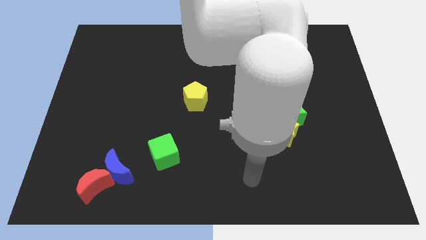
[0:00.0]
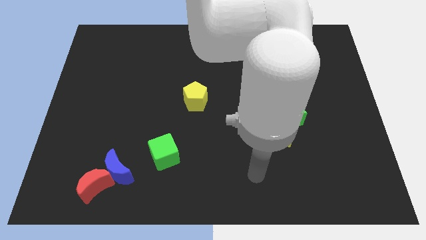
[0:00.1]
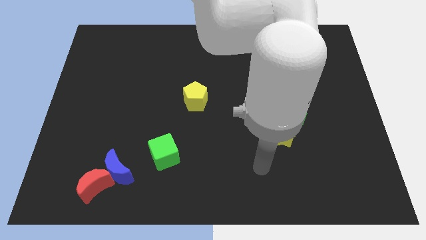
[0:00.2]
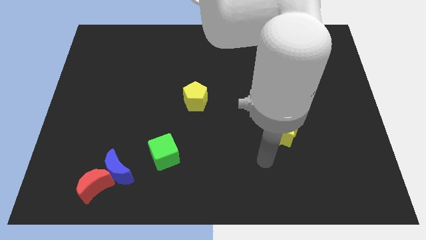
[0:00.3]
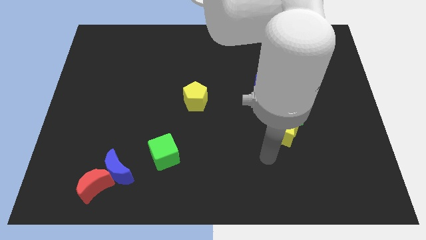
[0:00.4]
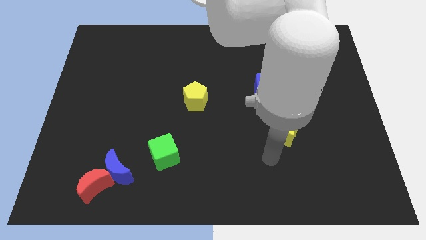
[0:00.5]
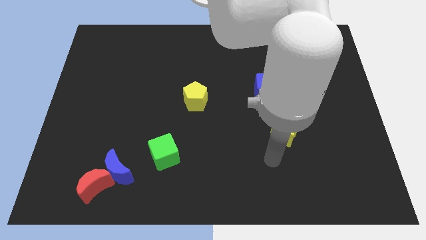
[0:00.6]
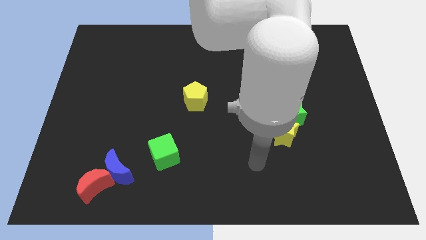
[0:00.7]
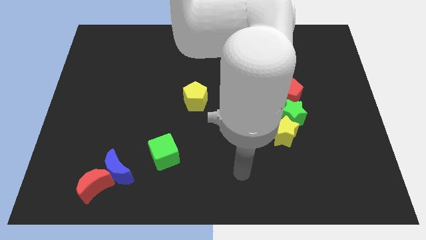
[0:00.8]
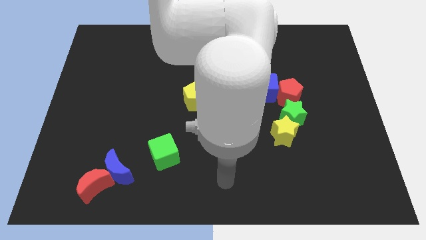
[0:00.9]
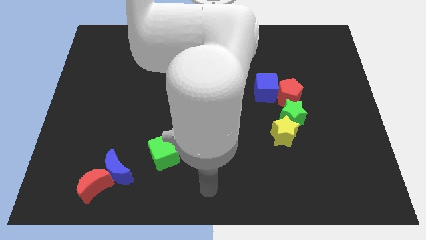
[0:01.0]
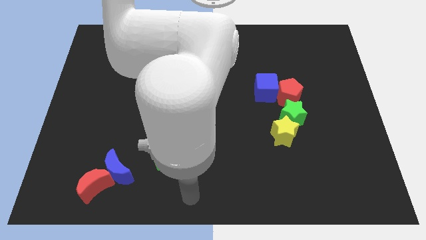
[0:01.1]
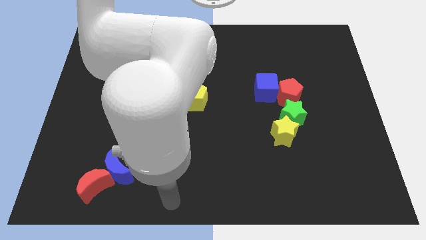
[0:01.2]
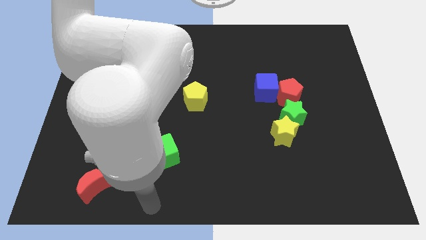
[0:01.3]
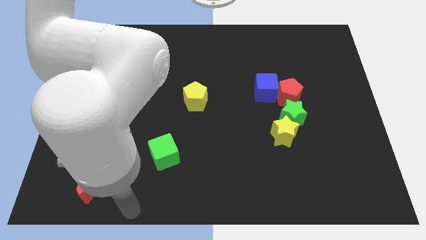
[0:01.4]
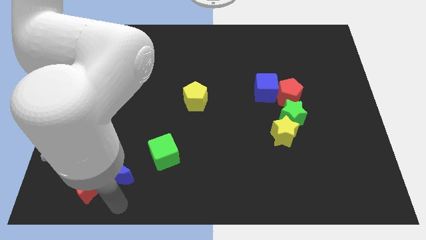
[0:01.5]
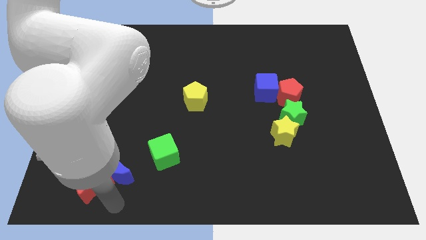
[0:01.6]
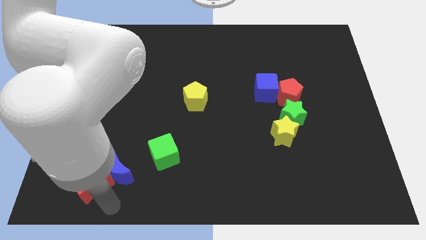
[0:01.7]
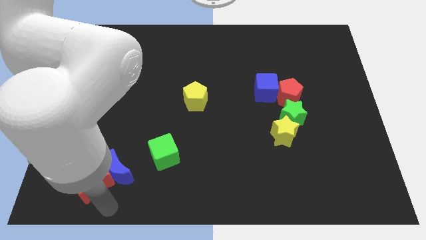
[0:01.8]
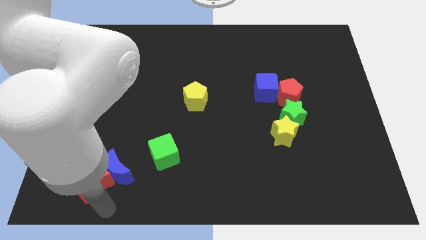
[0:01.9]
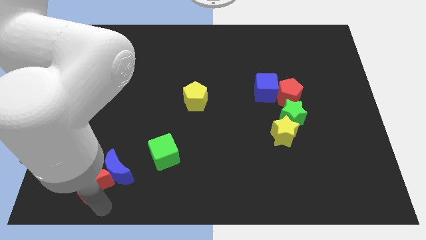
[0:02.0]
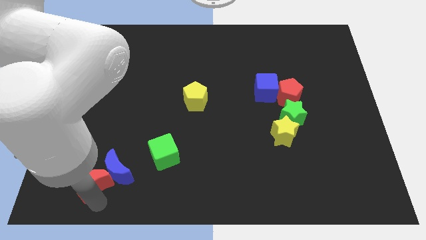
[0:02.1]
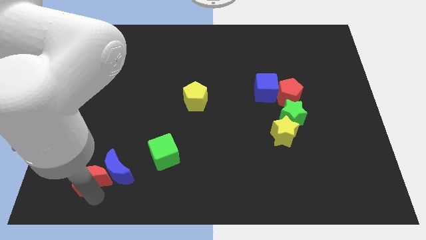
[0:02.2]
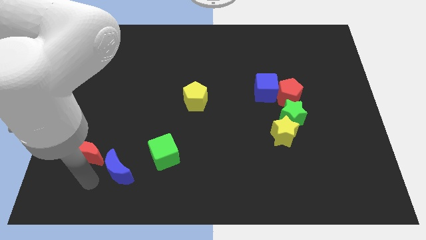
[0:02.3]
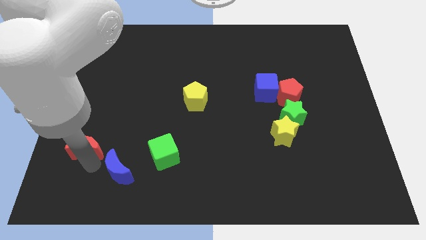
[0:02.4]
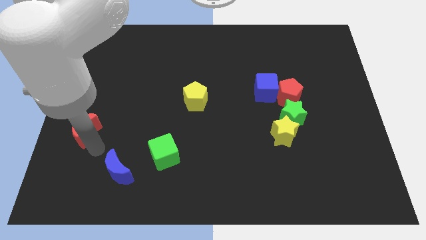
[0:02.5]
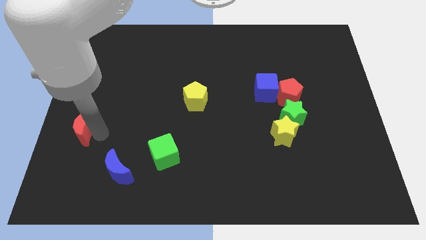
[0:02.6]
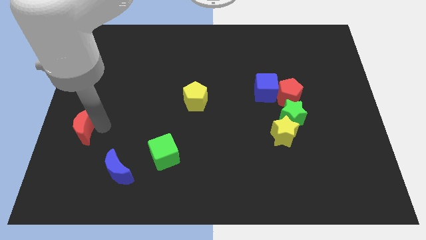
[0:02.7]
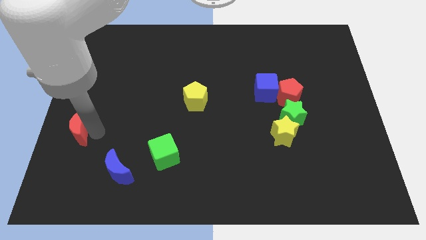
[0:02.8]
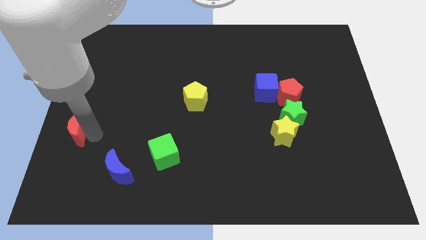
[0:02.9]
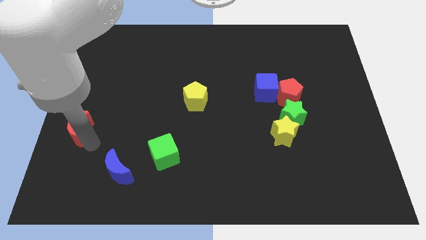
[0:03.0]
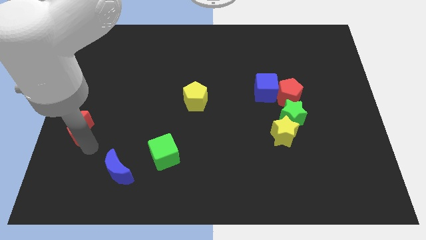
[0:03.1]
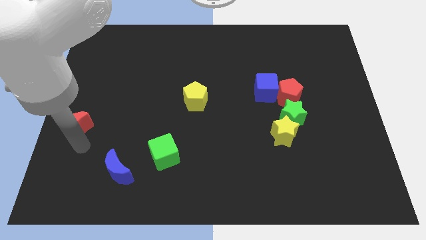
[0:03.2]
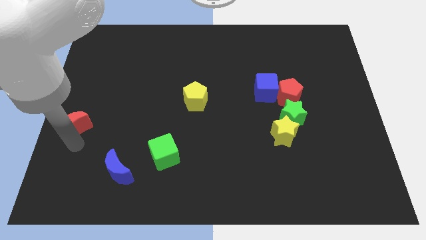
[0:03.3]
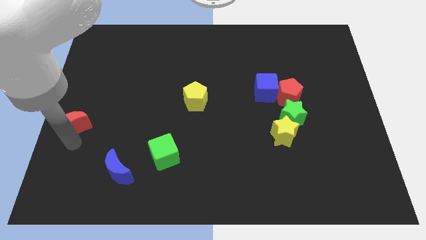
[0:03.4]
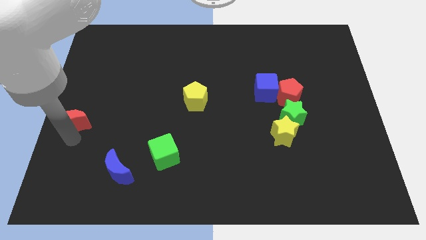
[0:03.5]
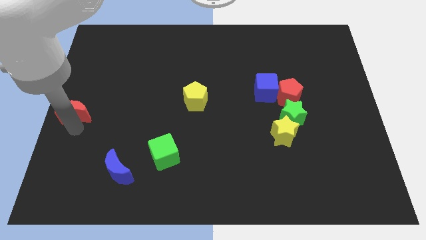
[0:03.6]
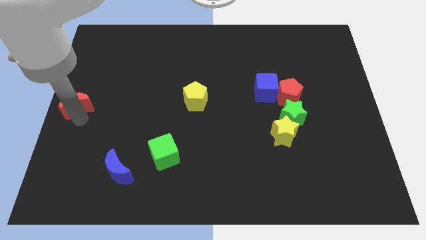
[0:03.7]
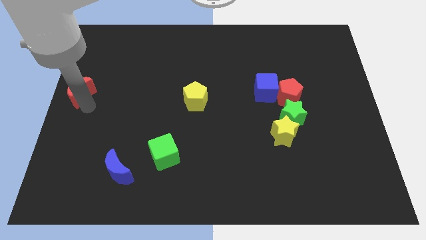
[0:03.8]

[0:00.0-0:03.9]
push the red crescent to the left center of the board

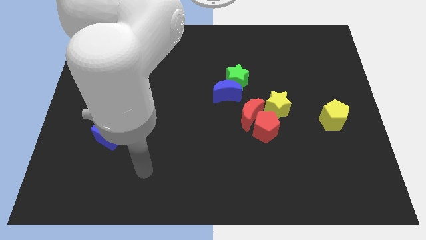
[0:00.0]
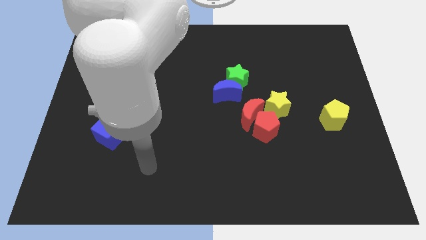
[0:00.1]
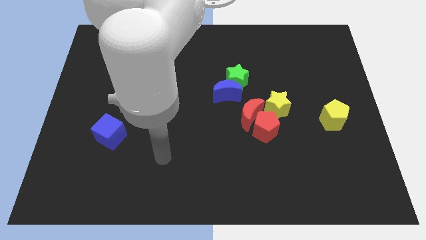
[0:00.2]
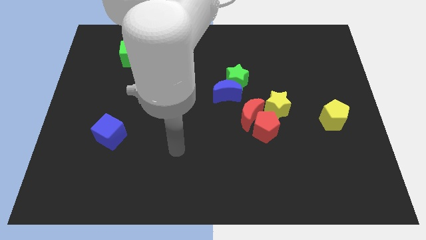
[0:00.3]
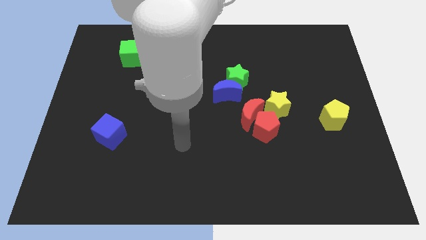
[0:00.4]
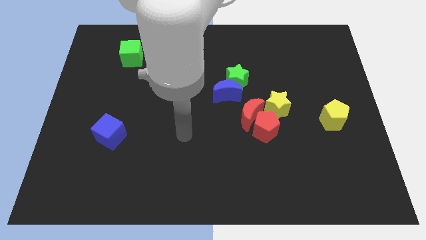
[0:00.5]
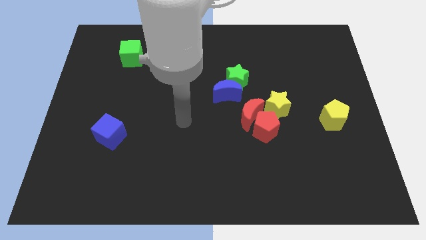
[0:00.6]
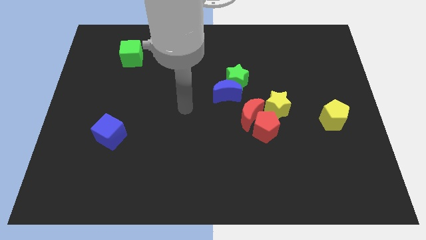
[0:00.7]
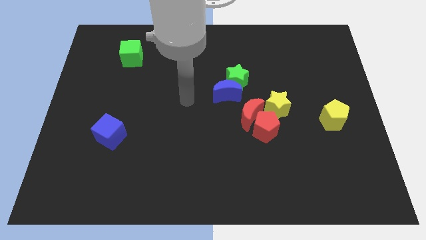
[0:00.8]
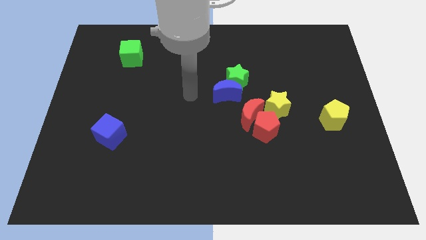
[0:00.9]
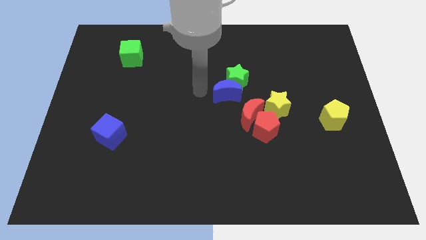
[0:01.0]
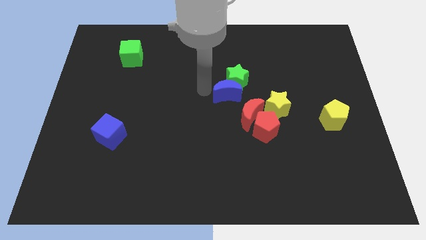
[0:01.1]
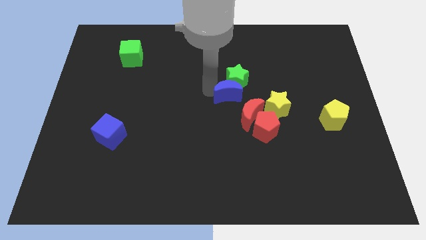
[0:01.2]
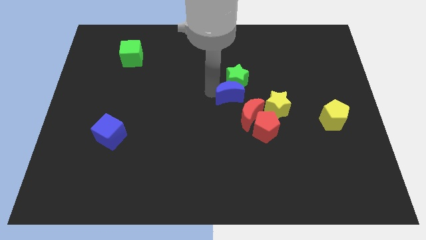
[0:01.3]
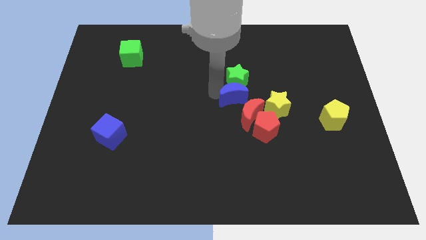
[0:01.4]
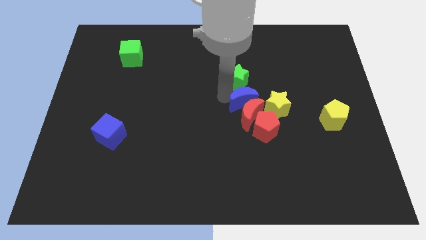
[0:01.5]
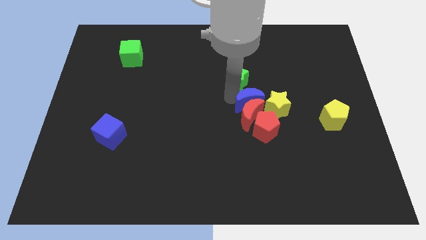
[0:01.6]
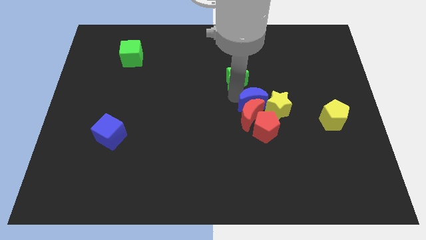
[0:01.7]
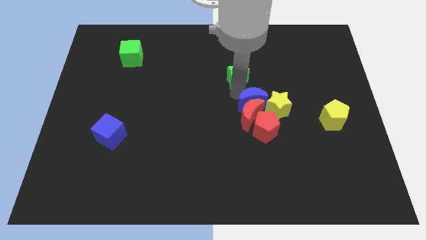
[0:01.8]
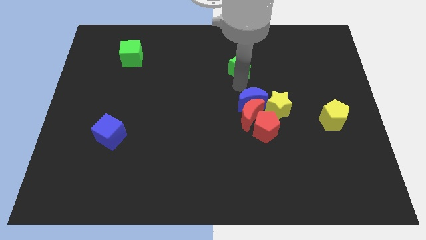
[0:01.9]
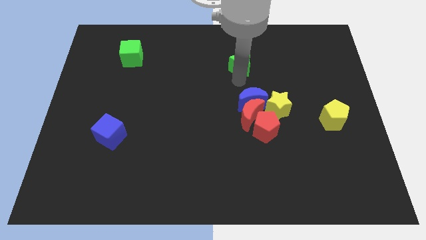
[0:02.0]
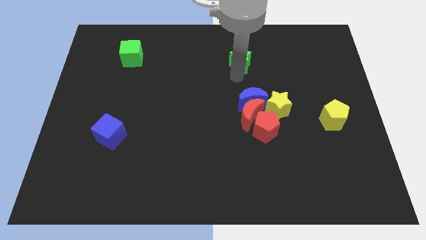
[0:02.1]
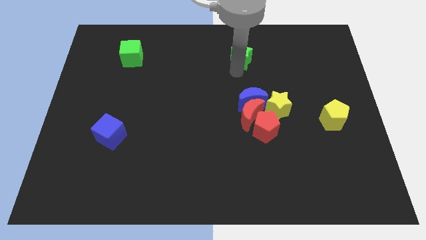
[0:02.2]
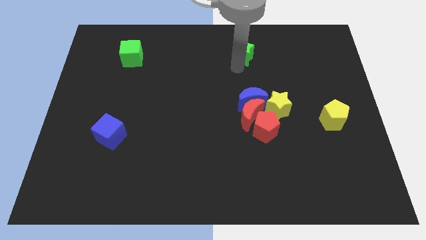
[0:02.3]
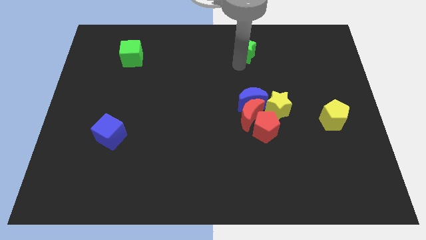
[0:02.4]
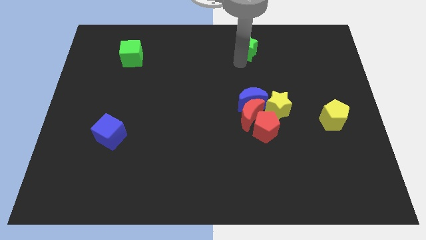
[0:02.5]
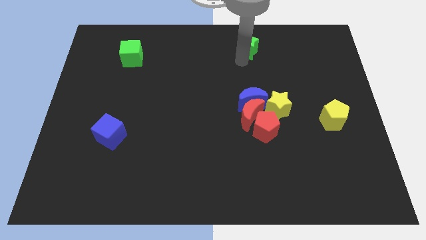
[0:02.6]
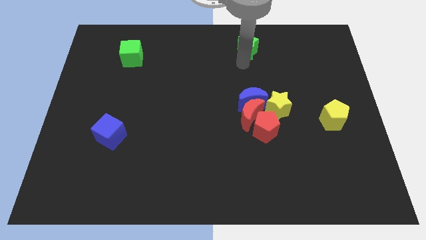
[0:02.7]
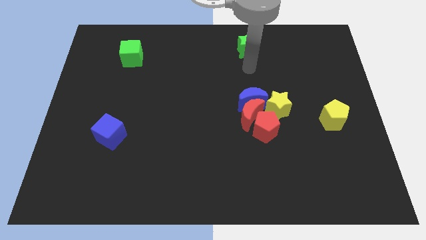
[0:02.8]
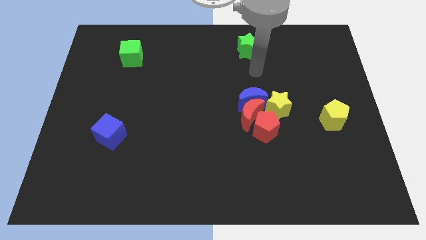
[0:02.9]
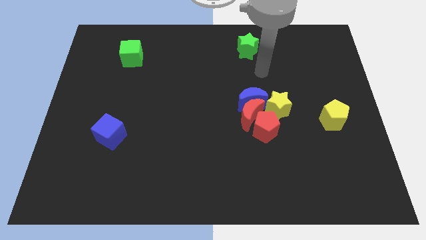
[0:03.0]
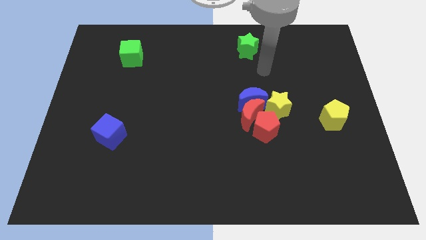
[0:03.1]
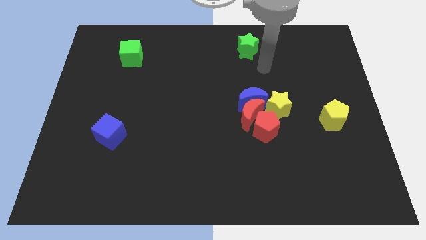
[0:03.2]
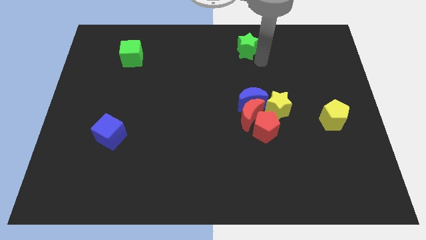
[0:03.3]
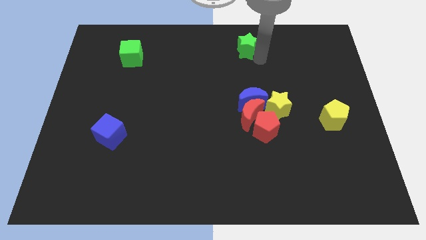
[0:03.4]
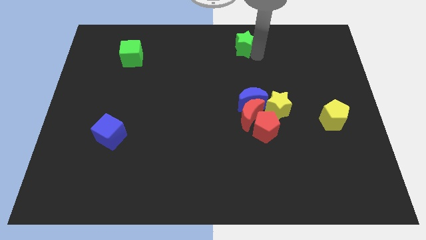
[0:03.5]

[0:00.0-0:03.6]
place the arm near the green star

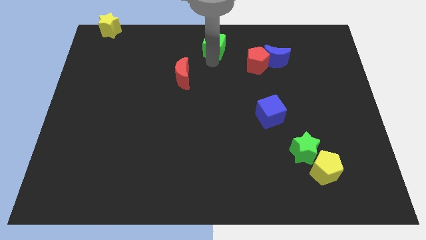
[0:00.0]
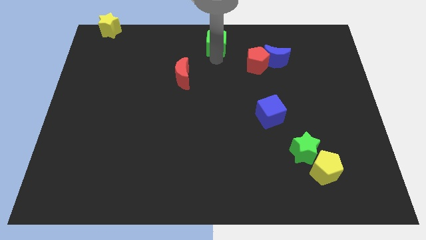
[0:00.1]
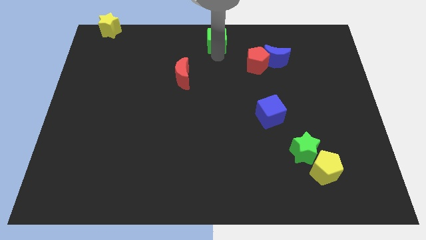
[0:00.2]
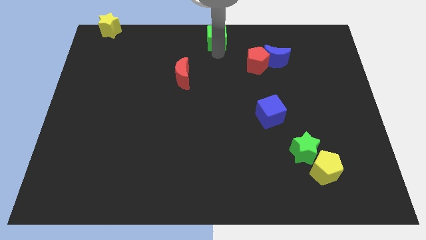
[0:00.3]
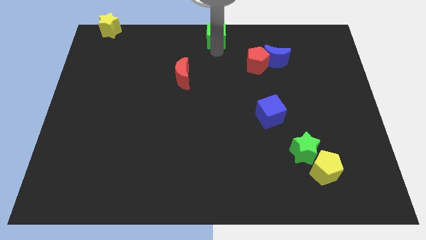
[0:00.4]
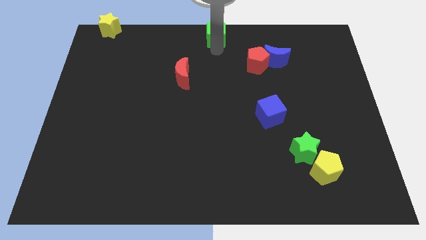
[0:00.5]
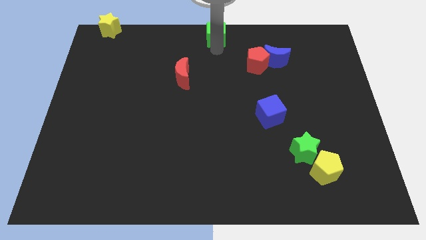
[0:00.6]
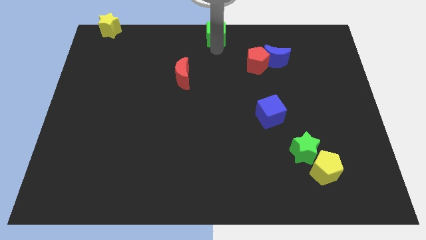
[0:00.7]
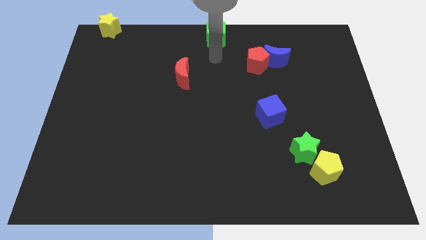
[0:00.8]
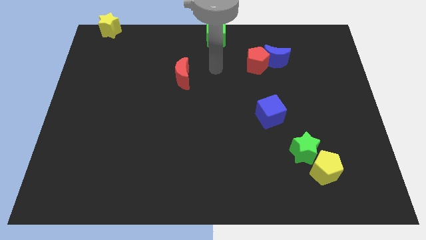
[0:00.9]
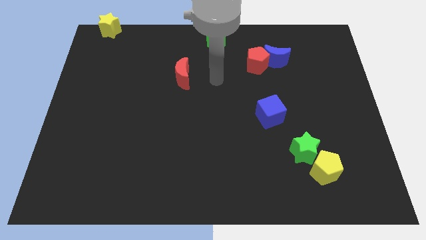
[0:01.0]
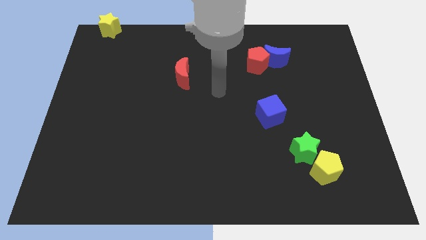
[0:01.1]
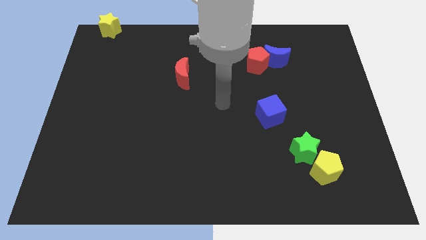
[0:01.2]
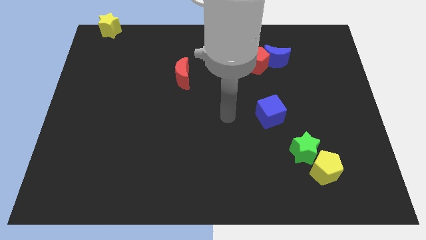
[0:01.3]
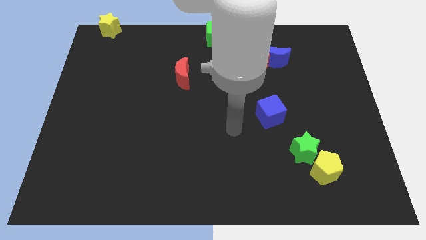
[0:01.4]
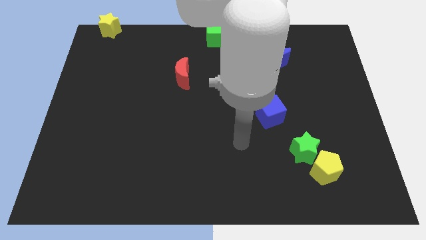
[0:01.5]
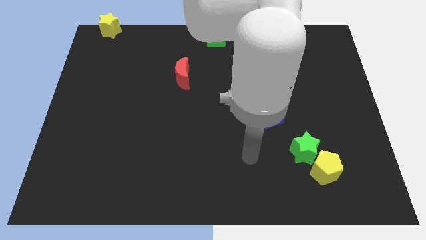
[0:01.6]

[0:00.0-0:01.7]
move the green cube towards the top center of the board
